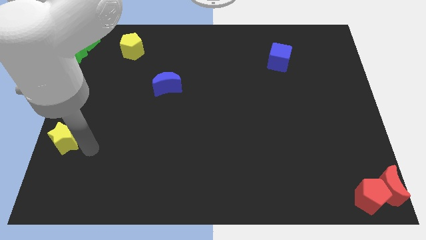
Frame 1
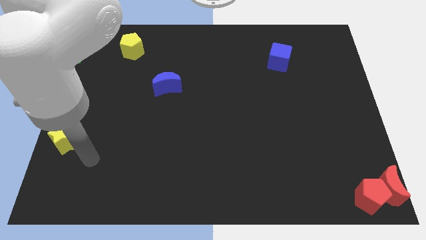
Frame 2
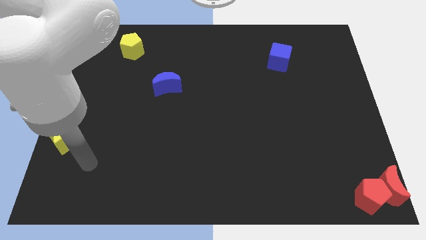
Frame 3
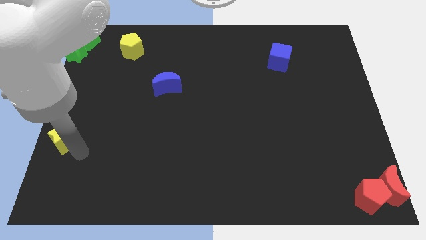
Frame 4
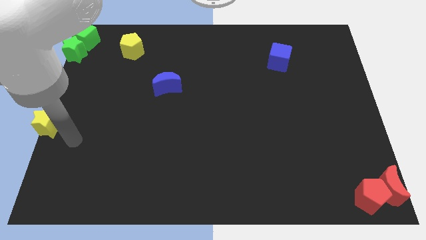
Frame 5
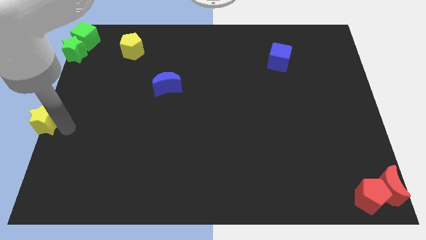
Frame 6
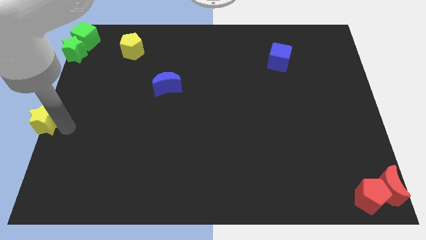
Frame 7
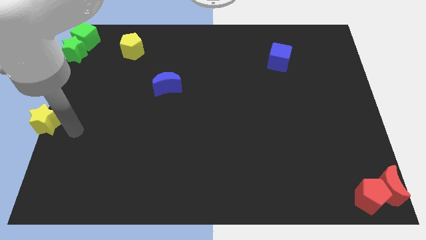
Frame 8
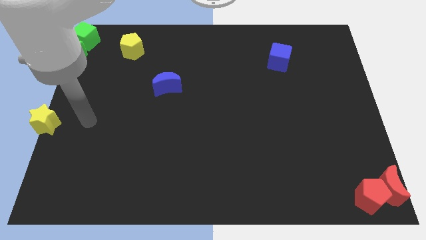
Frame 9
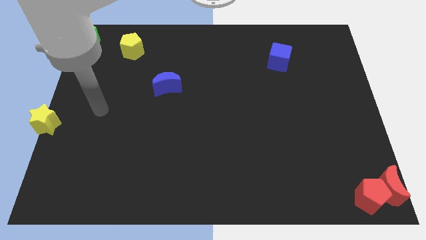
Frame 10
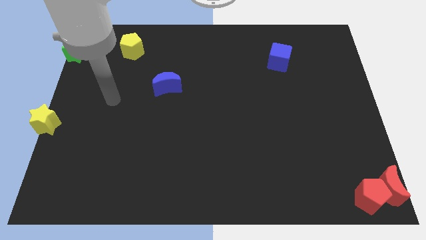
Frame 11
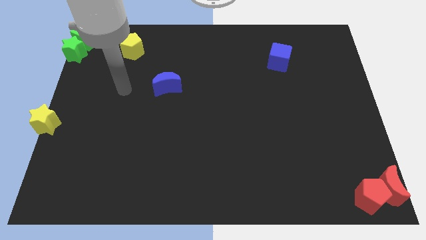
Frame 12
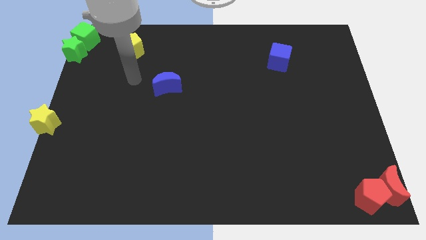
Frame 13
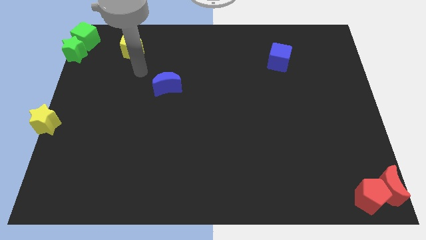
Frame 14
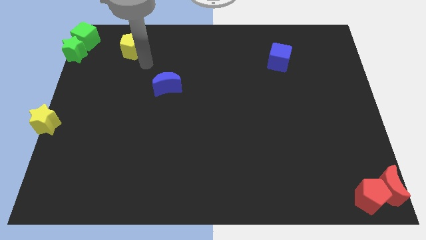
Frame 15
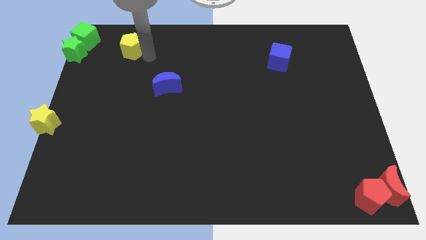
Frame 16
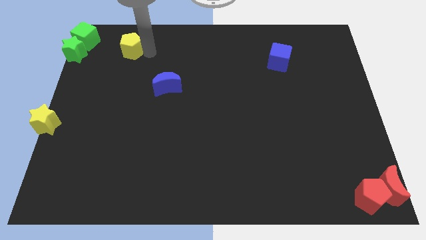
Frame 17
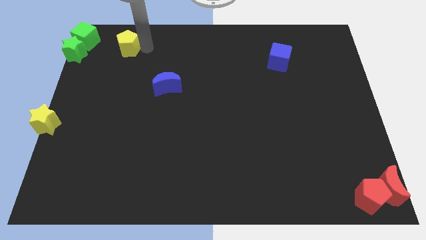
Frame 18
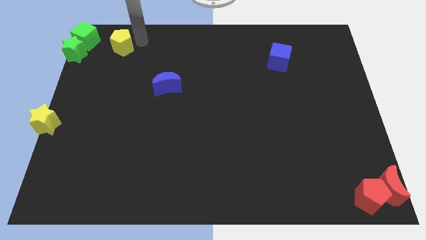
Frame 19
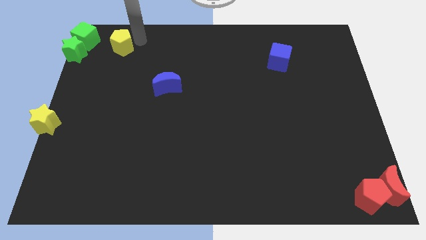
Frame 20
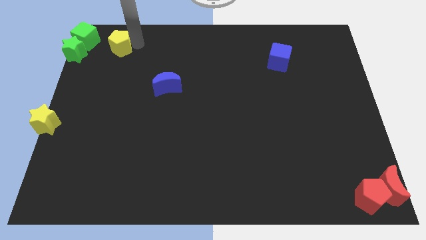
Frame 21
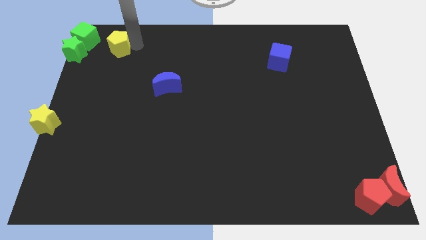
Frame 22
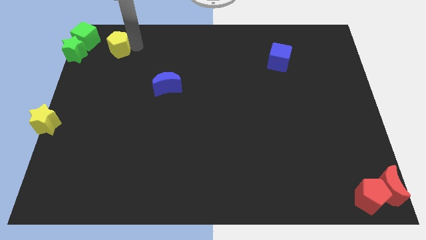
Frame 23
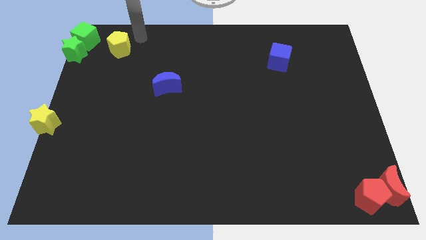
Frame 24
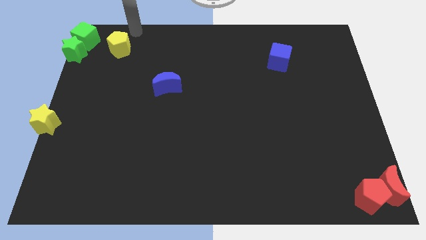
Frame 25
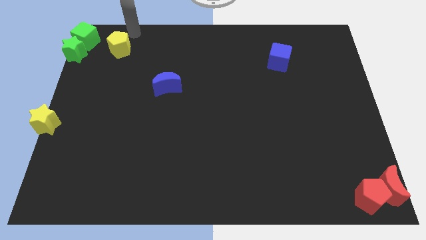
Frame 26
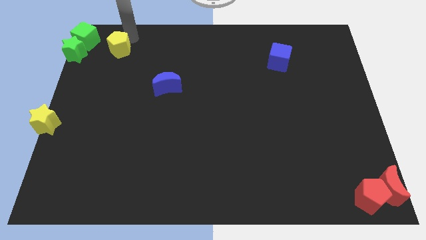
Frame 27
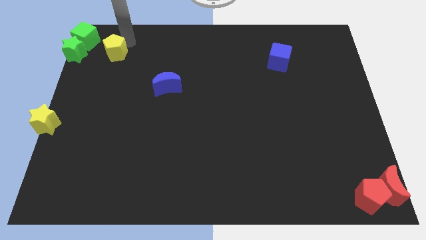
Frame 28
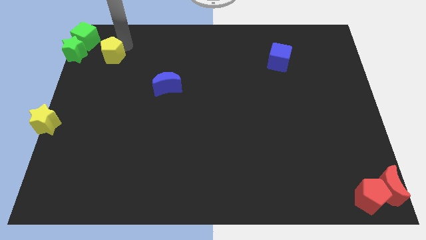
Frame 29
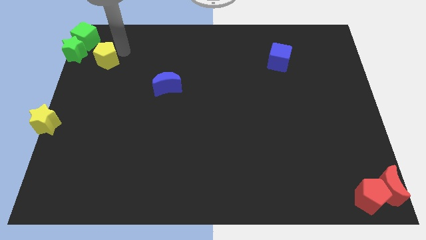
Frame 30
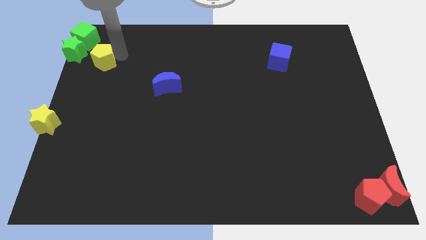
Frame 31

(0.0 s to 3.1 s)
place the yellow pentagon diagonally to the right of green cube

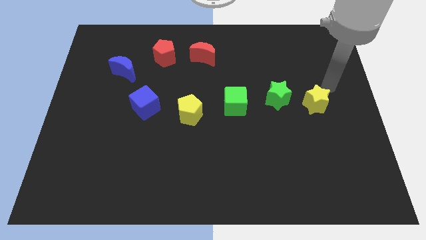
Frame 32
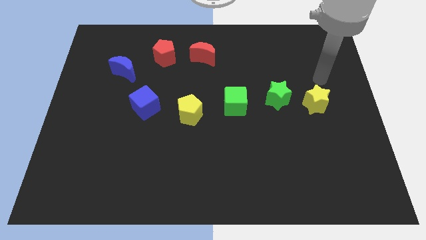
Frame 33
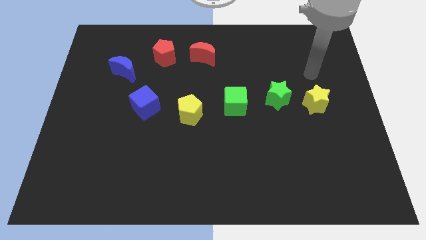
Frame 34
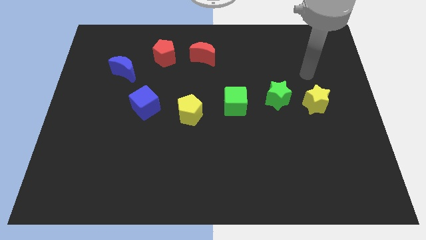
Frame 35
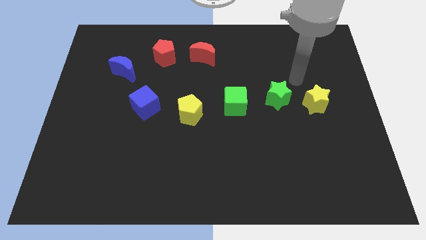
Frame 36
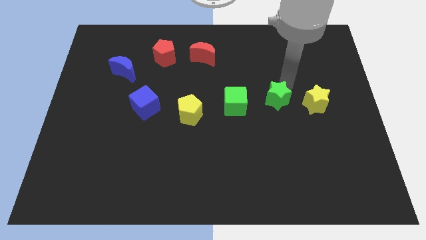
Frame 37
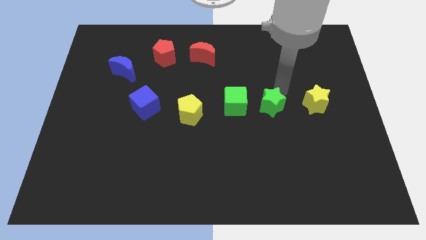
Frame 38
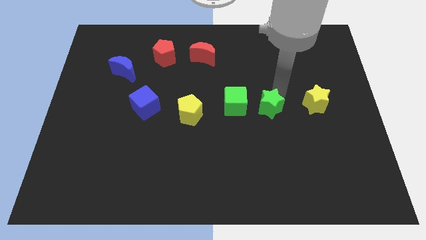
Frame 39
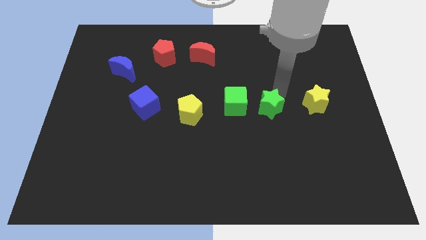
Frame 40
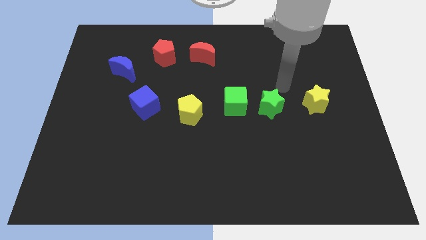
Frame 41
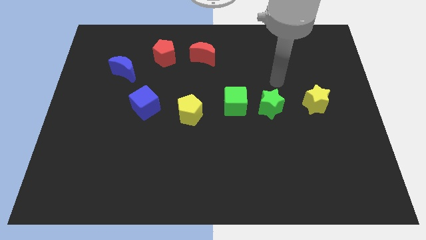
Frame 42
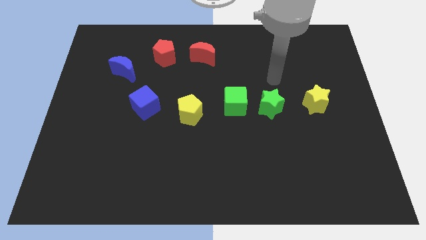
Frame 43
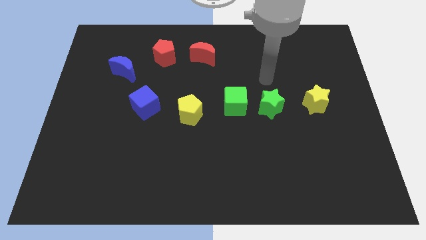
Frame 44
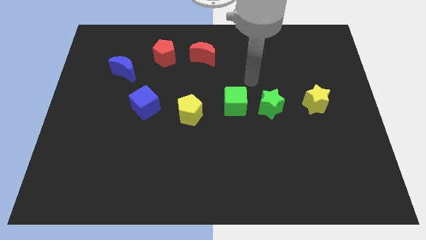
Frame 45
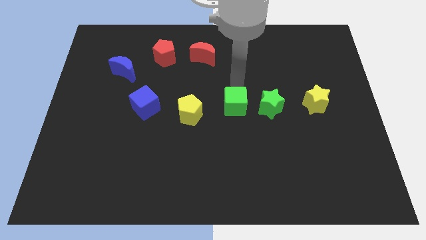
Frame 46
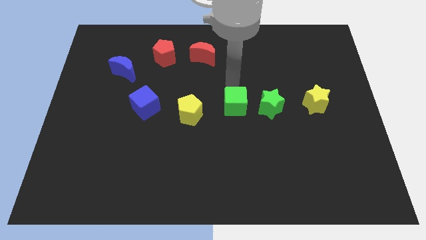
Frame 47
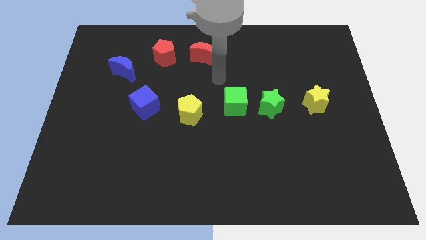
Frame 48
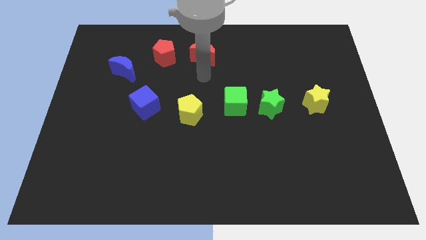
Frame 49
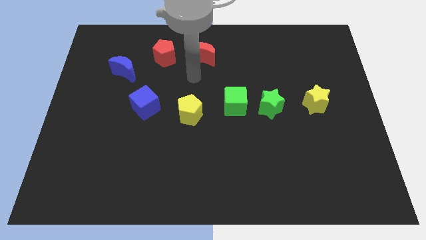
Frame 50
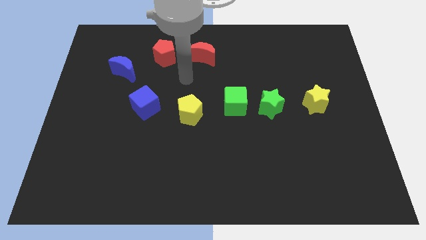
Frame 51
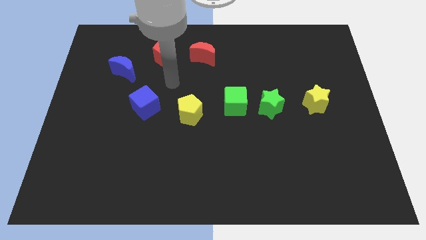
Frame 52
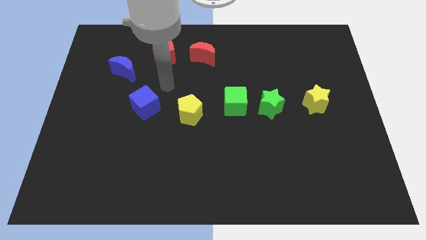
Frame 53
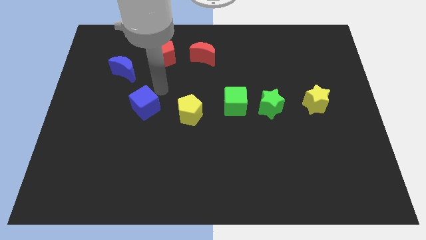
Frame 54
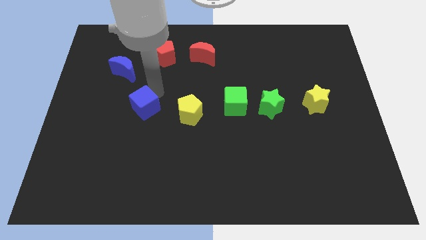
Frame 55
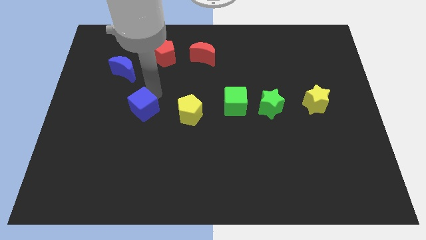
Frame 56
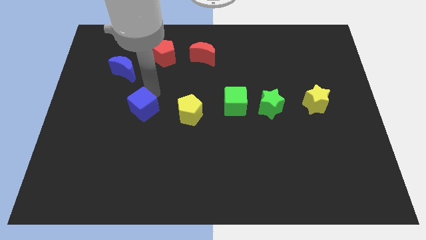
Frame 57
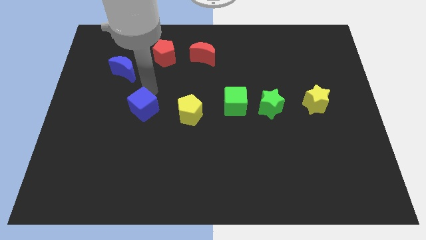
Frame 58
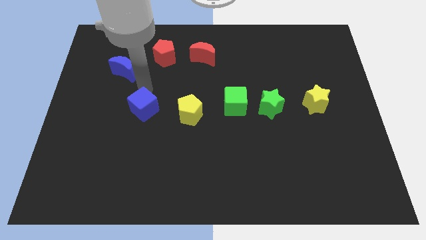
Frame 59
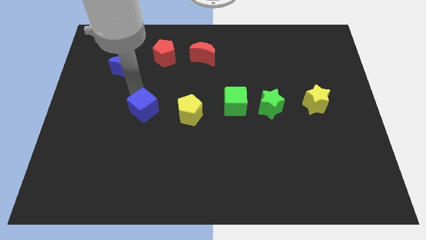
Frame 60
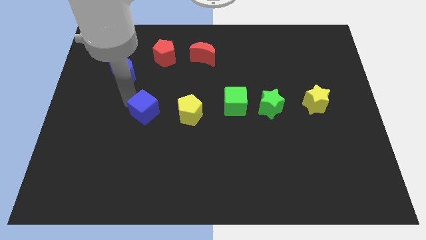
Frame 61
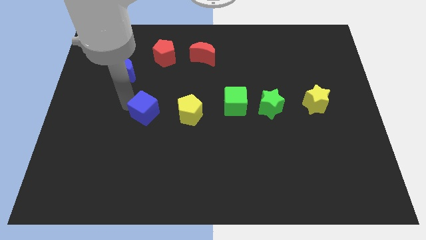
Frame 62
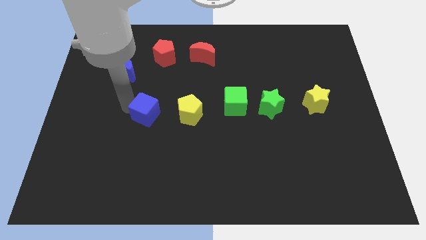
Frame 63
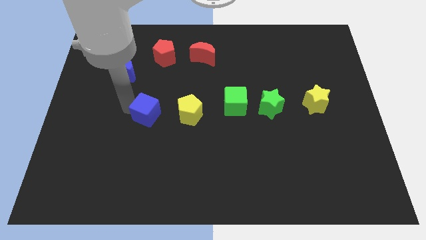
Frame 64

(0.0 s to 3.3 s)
push blue cube slightly downwards

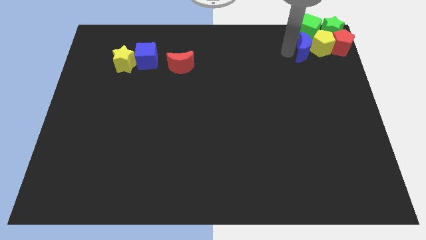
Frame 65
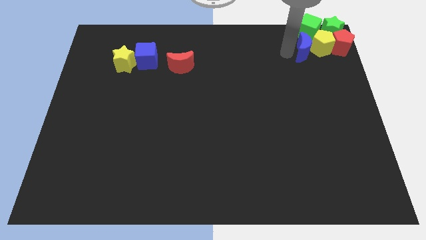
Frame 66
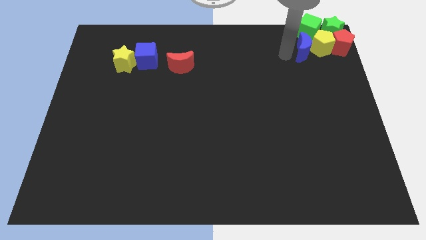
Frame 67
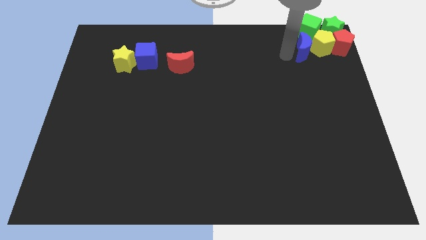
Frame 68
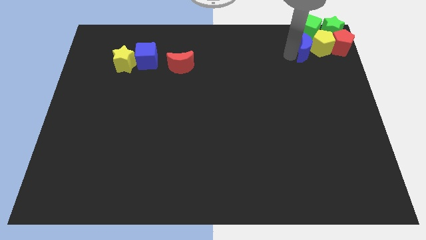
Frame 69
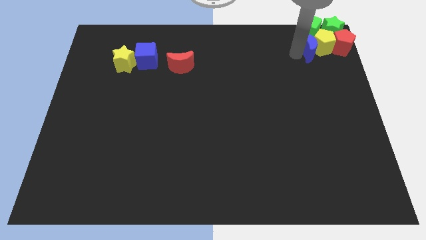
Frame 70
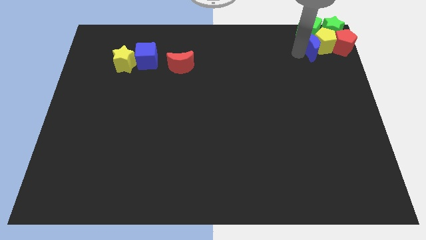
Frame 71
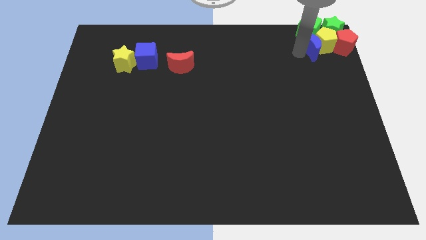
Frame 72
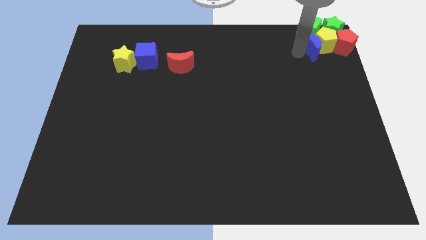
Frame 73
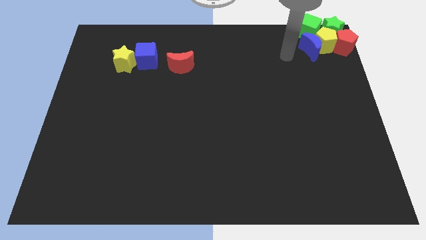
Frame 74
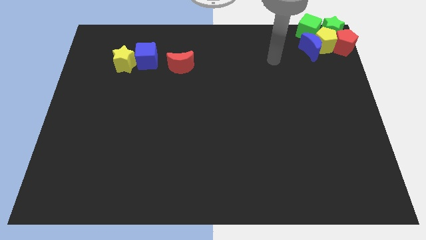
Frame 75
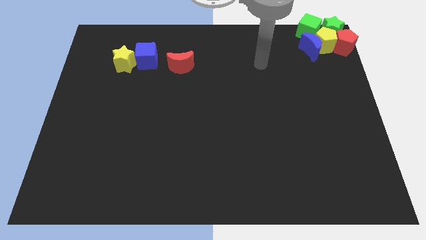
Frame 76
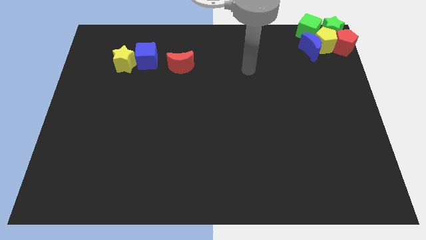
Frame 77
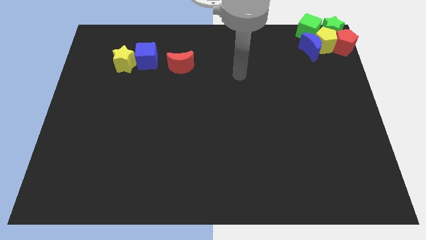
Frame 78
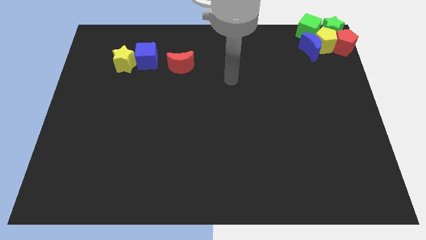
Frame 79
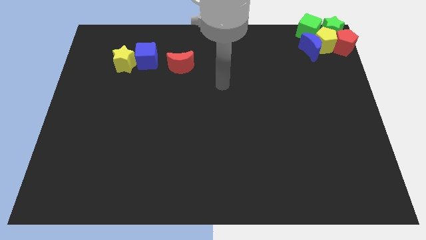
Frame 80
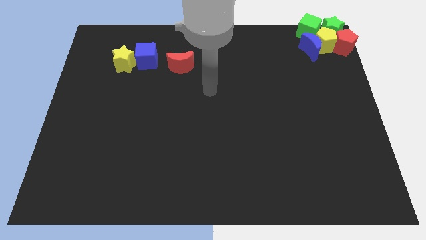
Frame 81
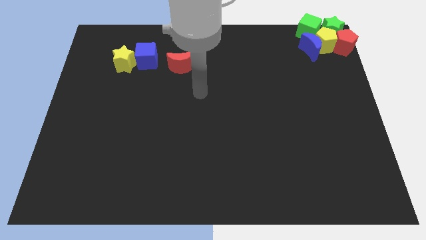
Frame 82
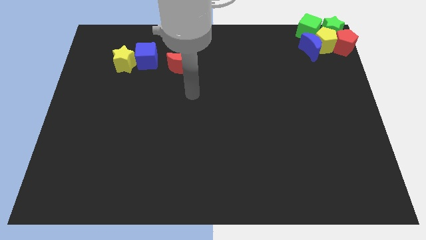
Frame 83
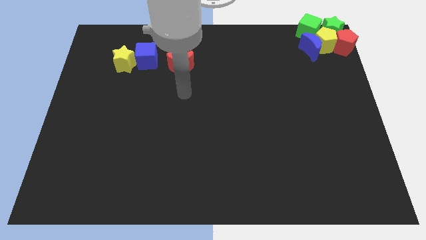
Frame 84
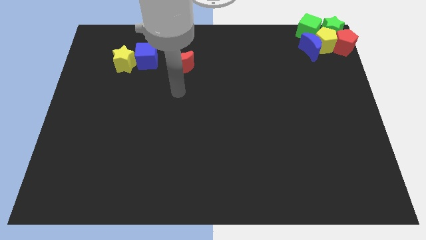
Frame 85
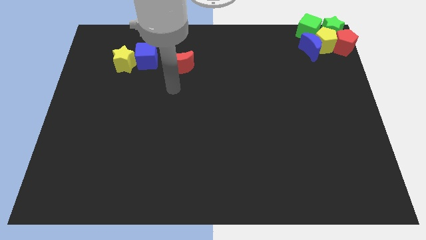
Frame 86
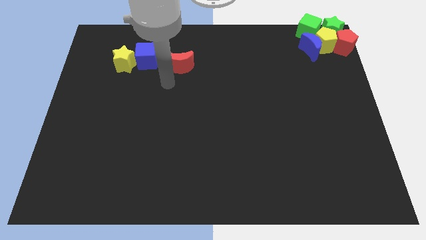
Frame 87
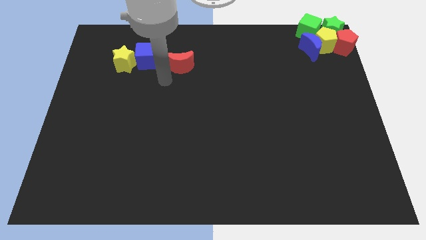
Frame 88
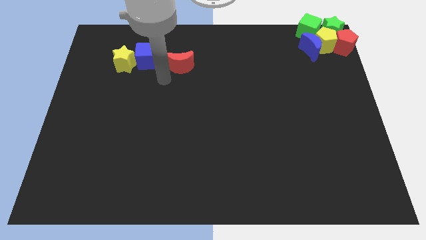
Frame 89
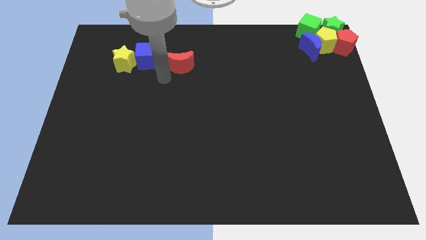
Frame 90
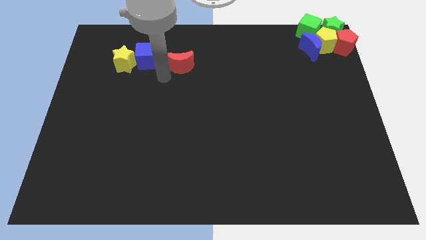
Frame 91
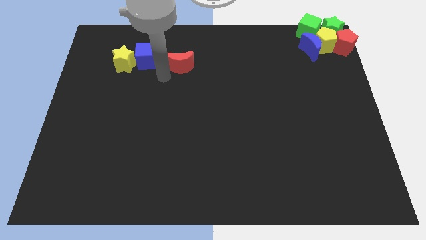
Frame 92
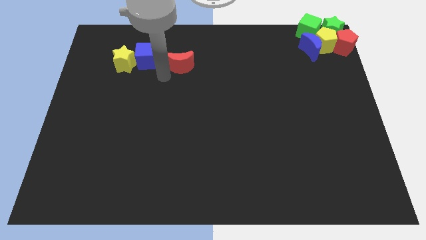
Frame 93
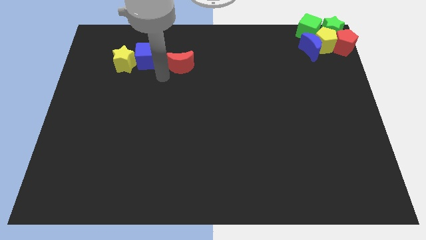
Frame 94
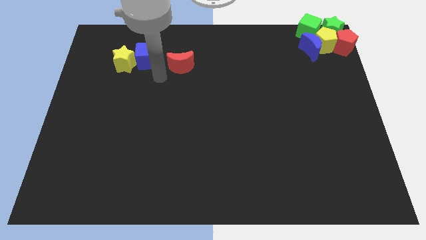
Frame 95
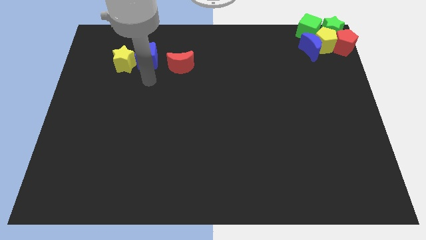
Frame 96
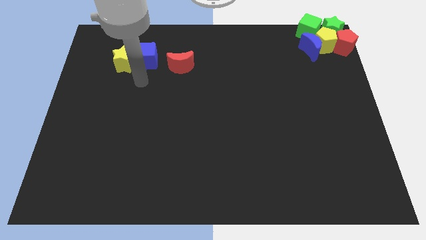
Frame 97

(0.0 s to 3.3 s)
move your arm away from the group of blocks
